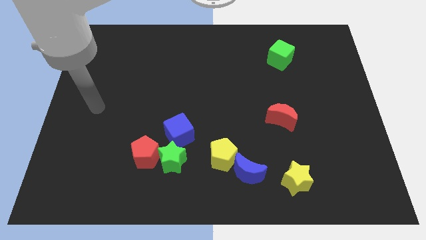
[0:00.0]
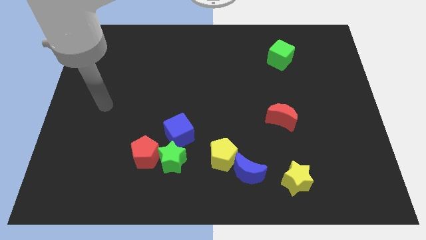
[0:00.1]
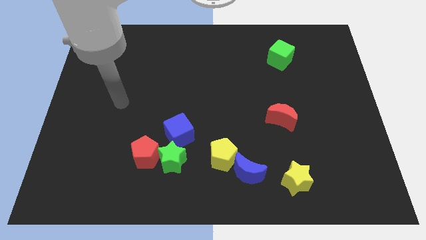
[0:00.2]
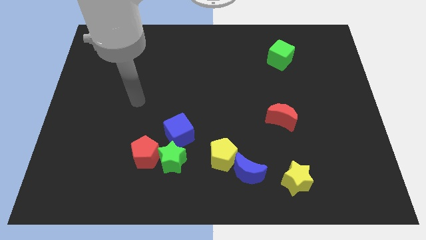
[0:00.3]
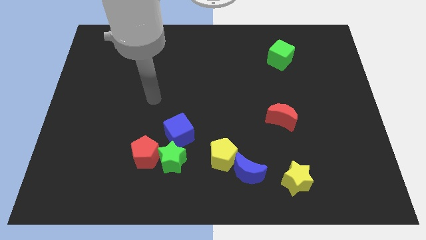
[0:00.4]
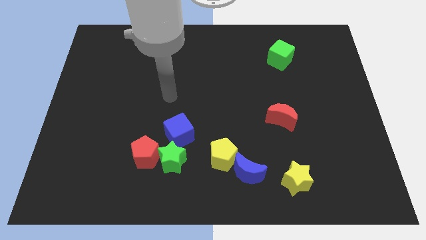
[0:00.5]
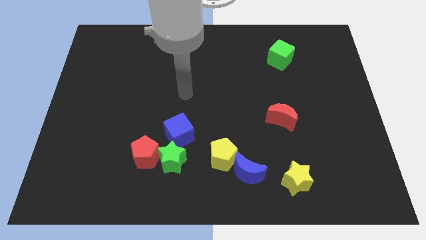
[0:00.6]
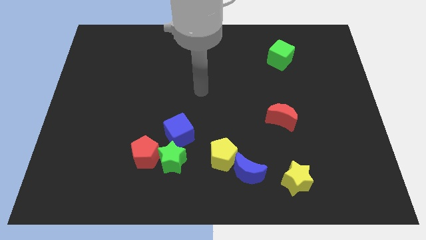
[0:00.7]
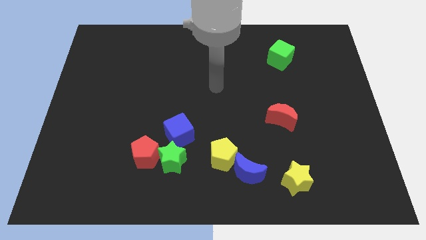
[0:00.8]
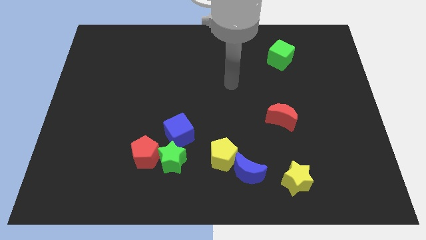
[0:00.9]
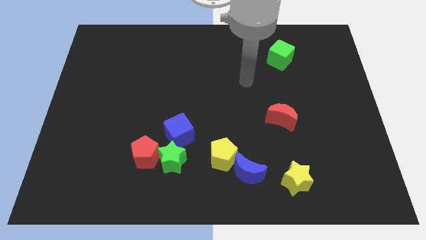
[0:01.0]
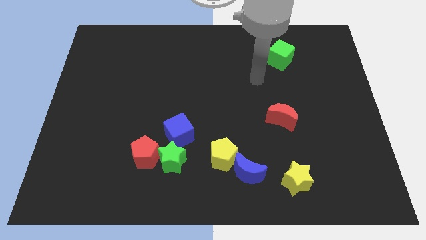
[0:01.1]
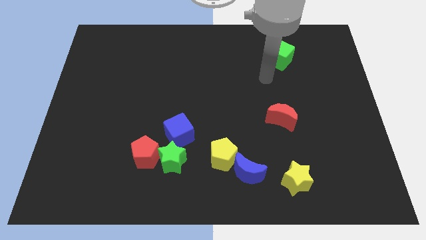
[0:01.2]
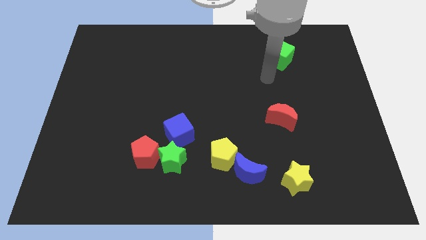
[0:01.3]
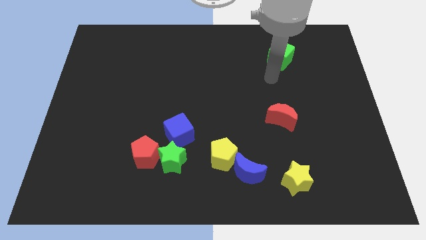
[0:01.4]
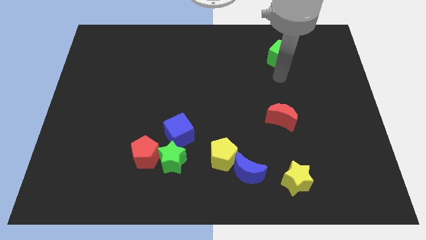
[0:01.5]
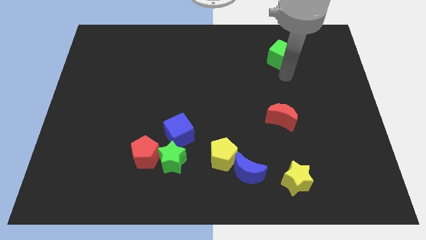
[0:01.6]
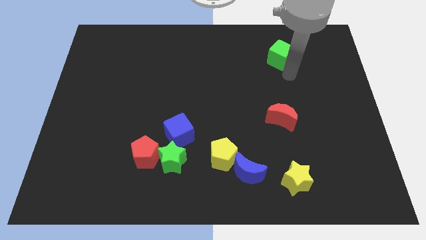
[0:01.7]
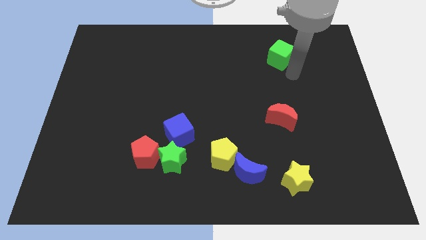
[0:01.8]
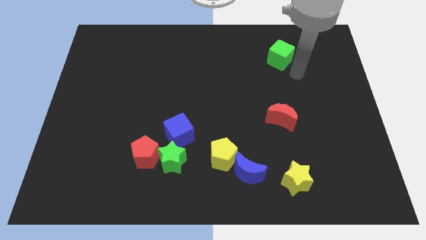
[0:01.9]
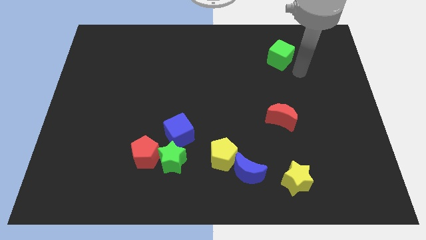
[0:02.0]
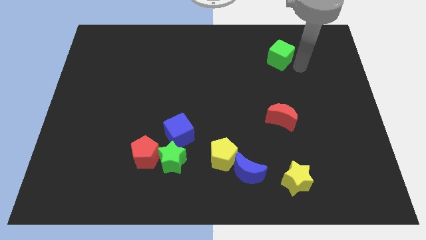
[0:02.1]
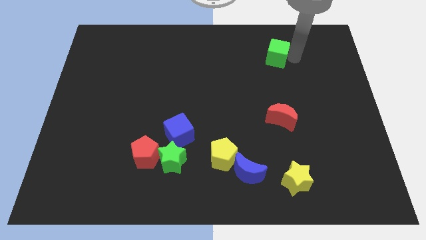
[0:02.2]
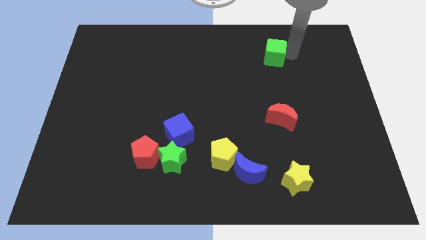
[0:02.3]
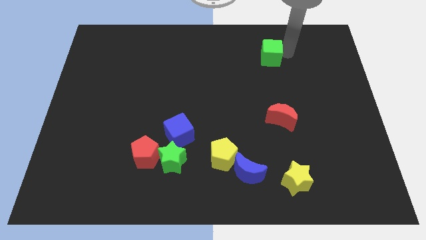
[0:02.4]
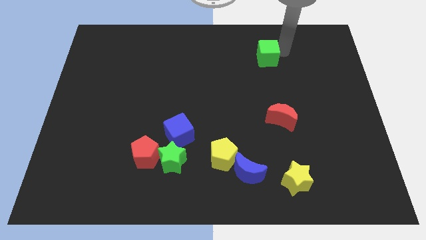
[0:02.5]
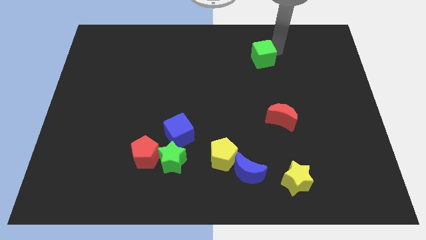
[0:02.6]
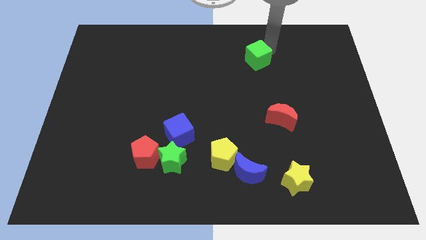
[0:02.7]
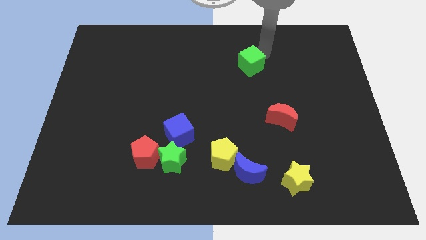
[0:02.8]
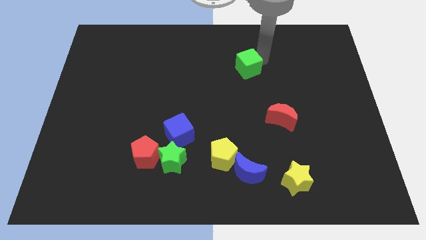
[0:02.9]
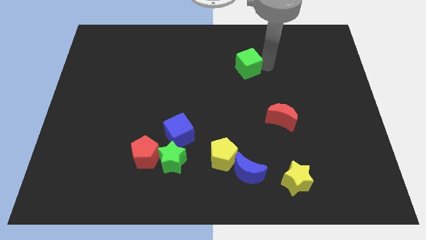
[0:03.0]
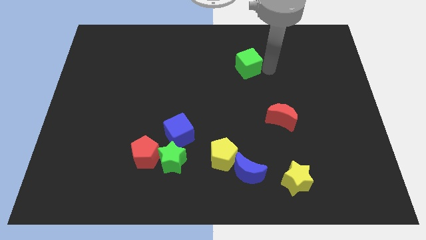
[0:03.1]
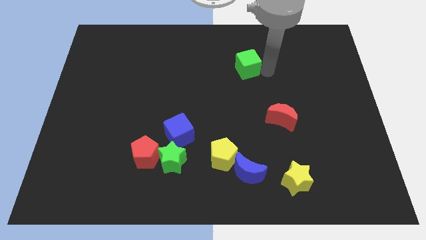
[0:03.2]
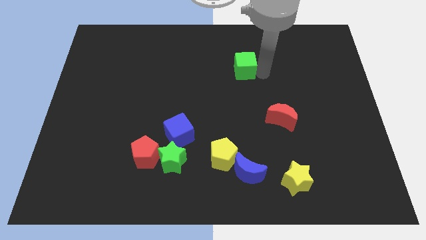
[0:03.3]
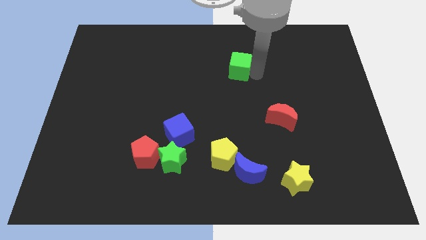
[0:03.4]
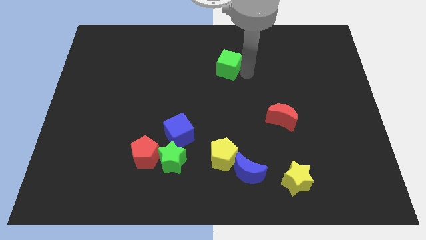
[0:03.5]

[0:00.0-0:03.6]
move the green cube vertically to yellow pentagon

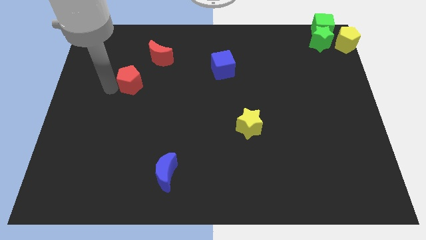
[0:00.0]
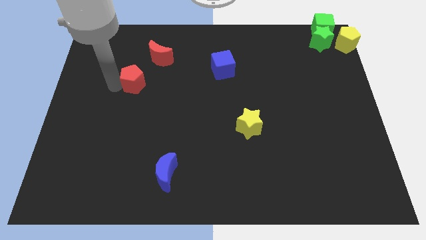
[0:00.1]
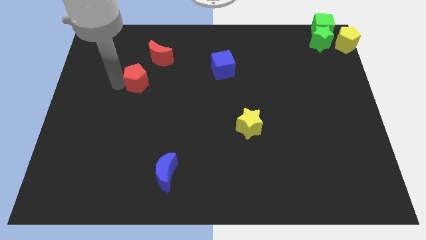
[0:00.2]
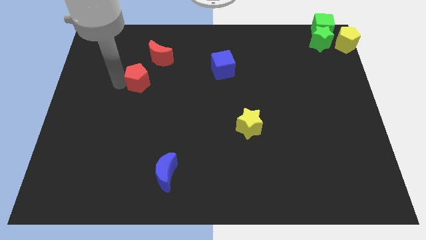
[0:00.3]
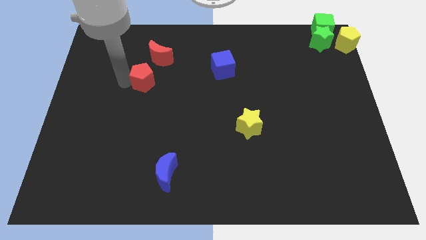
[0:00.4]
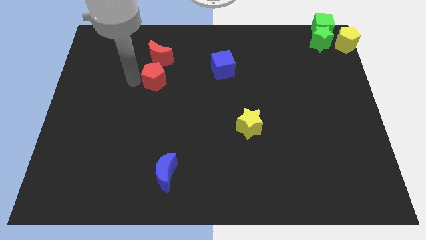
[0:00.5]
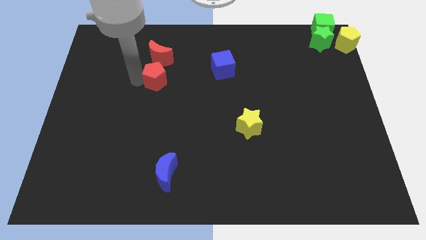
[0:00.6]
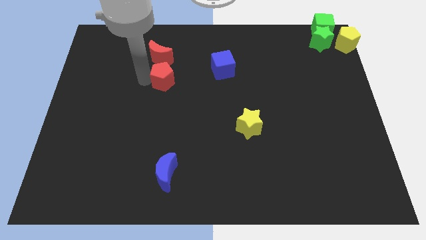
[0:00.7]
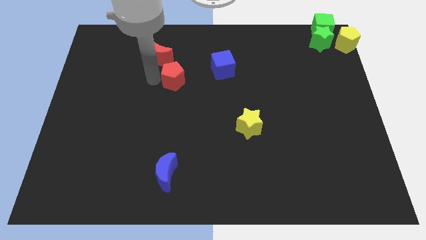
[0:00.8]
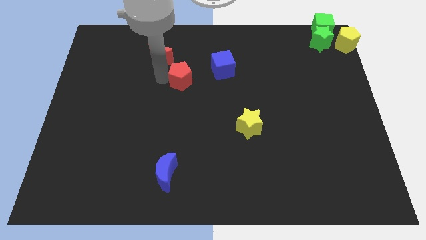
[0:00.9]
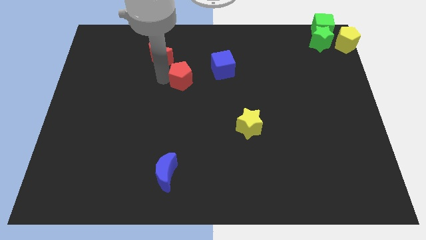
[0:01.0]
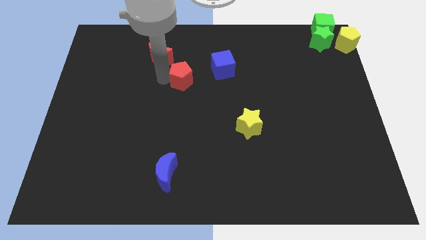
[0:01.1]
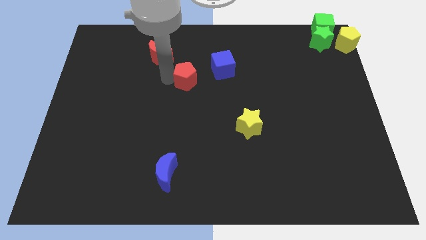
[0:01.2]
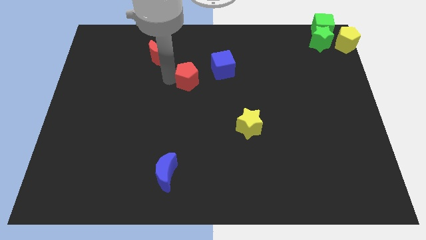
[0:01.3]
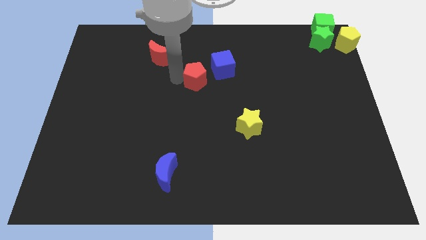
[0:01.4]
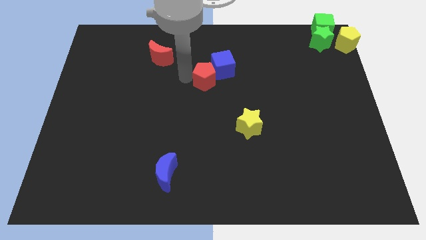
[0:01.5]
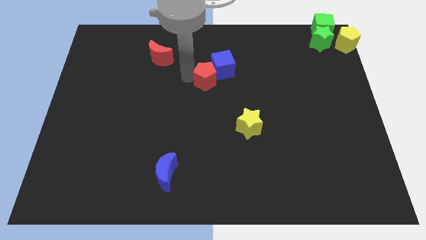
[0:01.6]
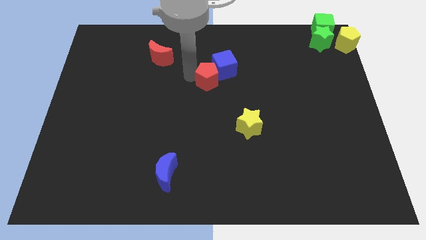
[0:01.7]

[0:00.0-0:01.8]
slide the red pentagon to touch the left of the blue cube

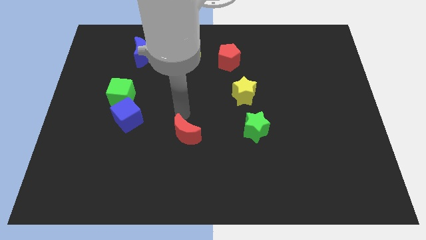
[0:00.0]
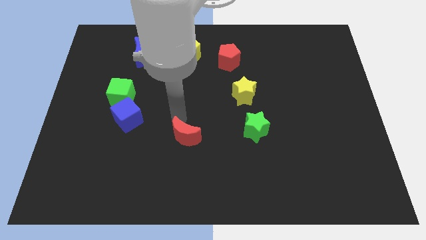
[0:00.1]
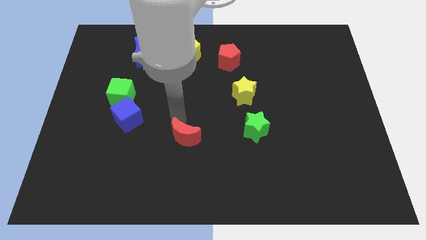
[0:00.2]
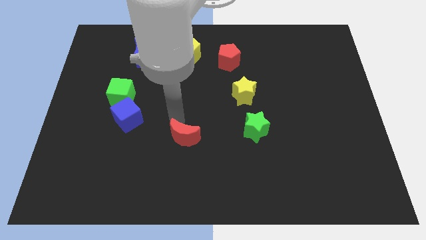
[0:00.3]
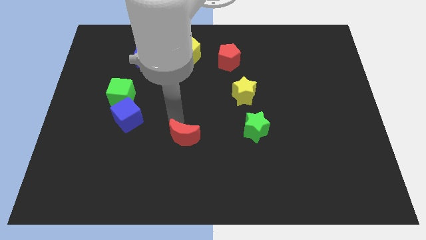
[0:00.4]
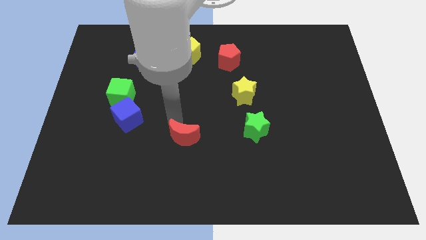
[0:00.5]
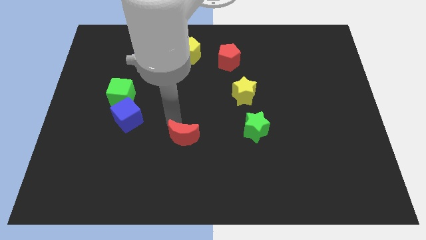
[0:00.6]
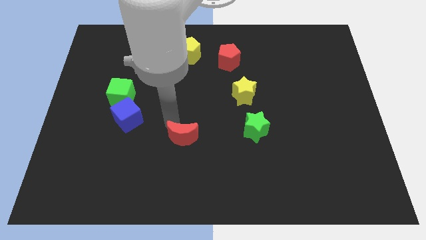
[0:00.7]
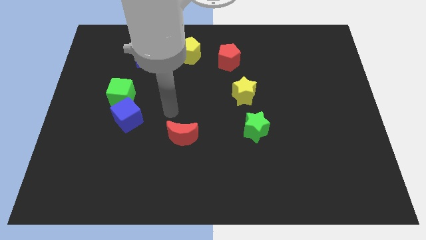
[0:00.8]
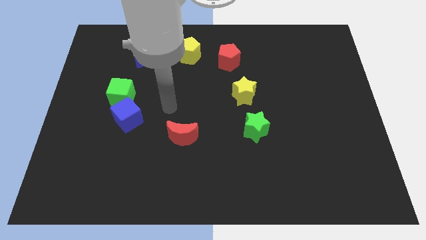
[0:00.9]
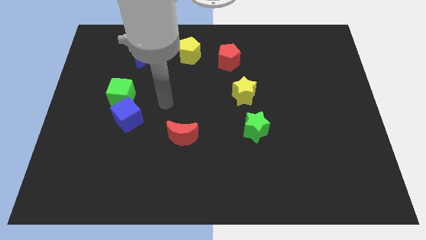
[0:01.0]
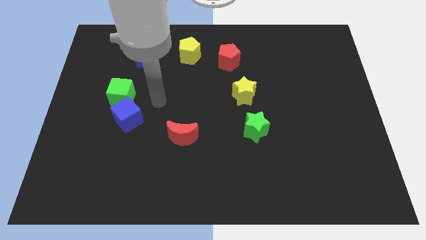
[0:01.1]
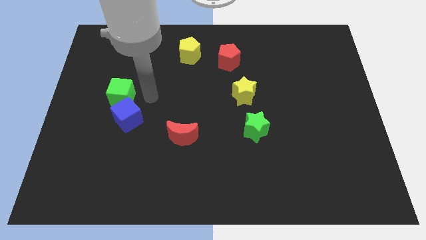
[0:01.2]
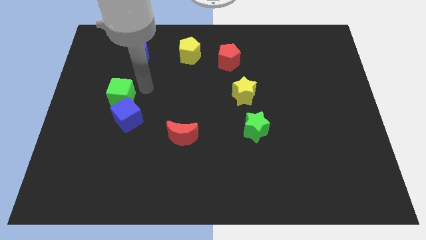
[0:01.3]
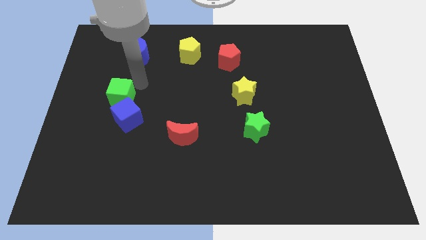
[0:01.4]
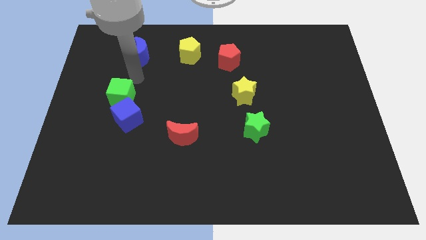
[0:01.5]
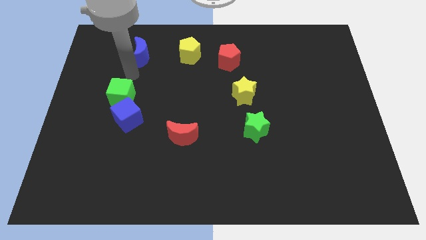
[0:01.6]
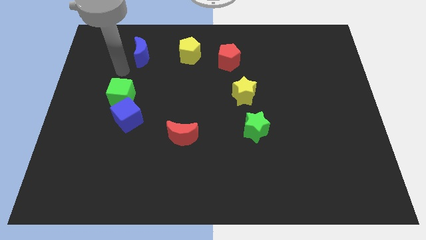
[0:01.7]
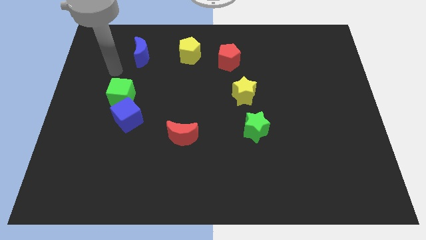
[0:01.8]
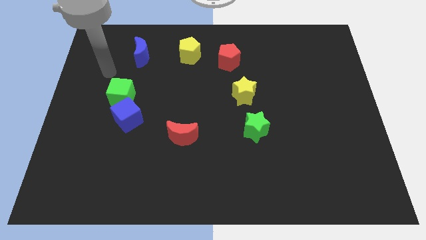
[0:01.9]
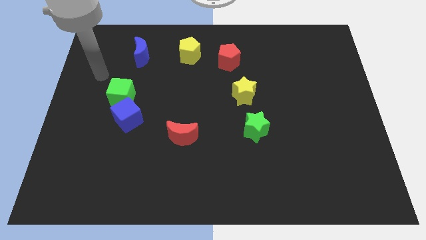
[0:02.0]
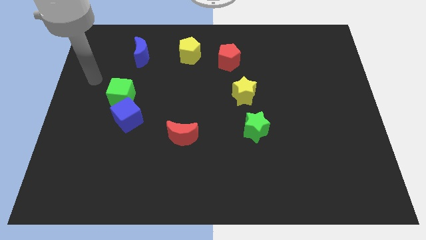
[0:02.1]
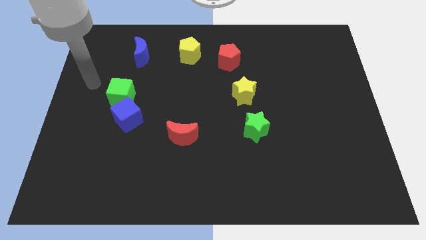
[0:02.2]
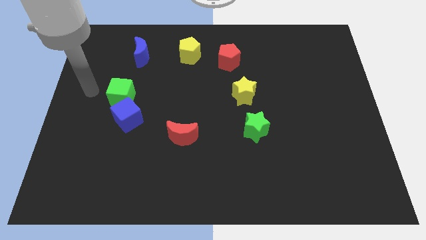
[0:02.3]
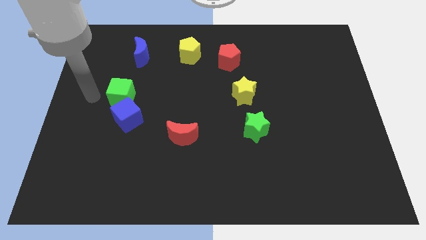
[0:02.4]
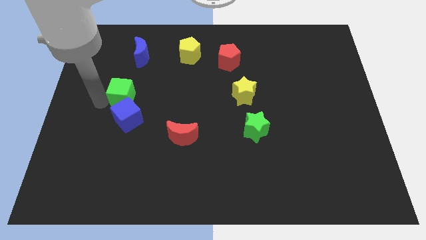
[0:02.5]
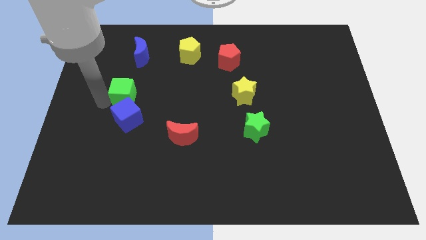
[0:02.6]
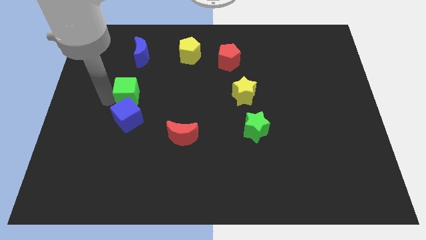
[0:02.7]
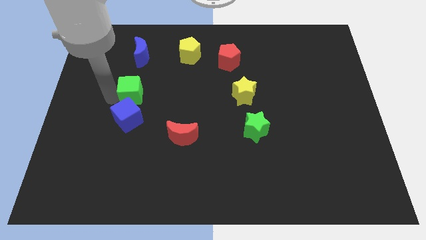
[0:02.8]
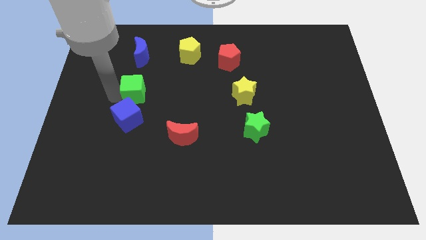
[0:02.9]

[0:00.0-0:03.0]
slightly move the green cube to the right top of the blue cube

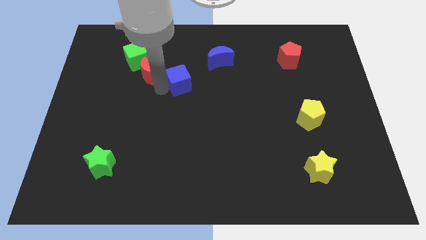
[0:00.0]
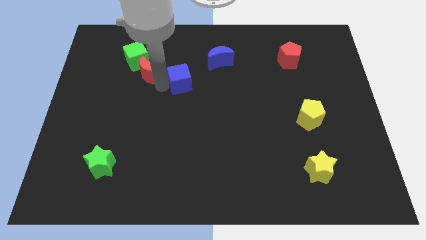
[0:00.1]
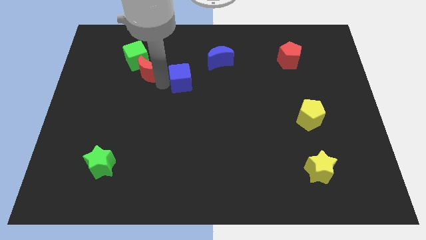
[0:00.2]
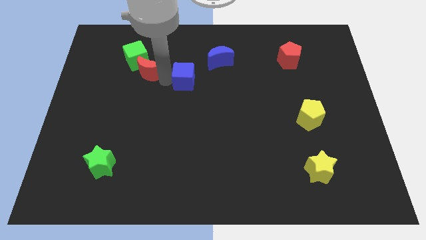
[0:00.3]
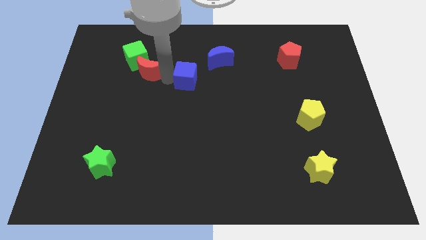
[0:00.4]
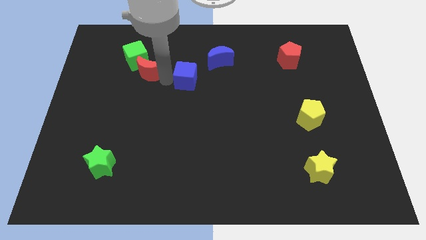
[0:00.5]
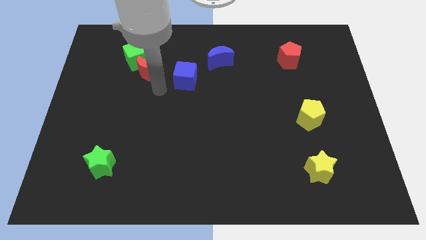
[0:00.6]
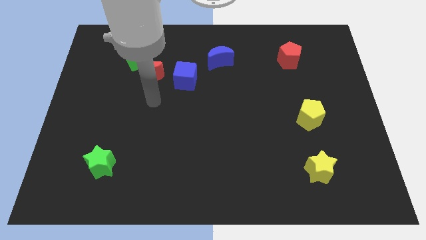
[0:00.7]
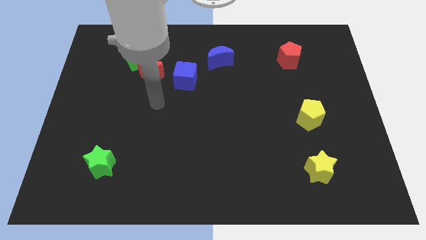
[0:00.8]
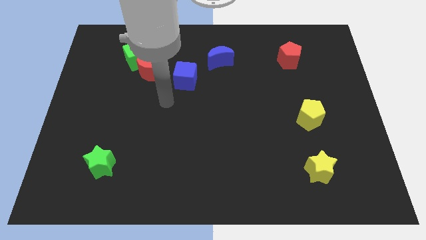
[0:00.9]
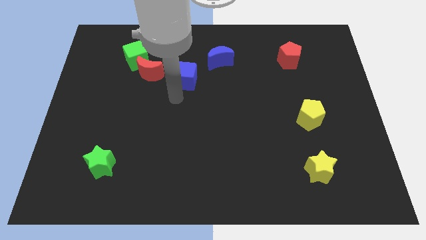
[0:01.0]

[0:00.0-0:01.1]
place the red crescent in between the blue cube and green cube
